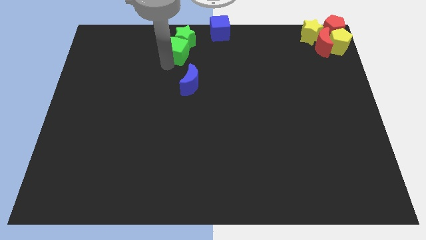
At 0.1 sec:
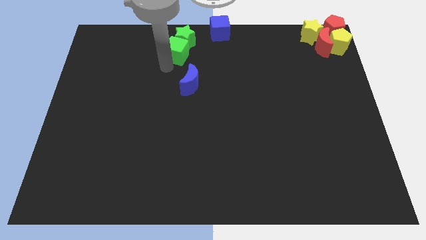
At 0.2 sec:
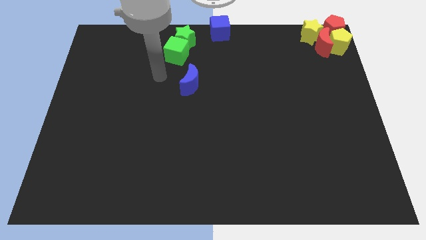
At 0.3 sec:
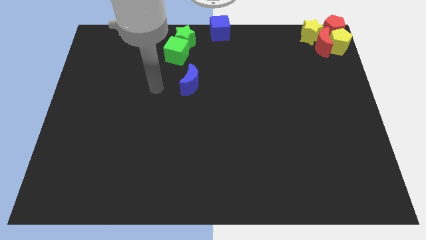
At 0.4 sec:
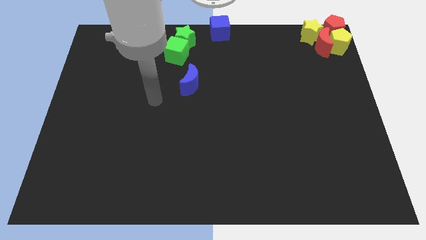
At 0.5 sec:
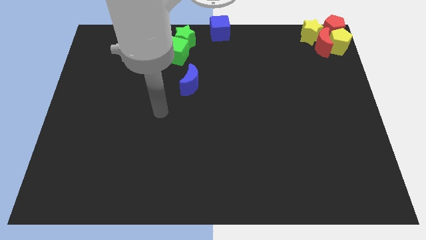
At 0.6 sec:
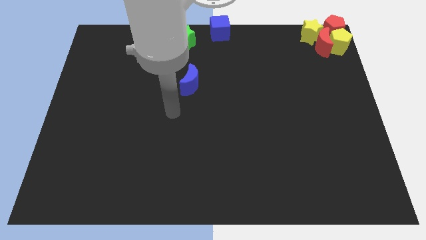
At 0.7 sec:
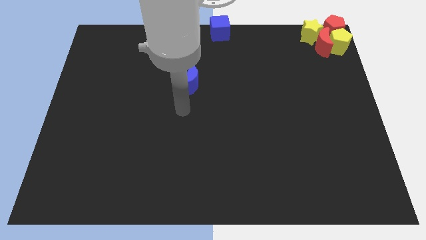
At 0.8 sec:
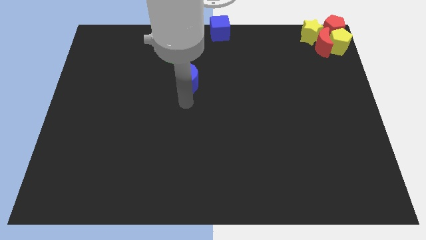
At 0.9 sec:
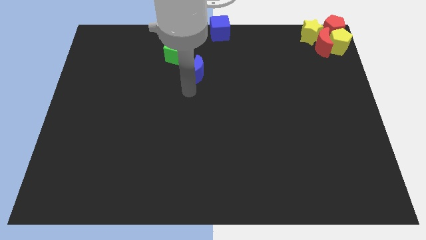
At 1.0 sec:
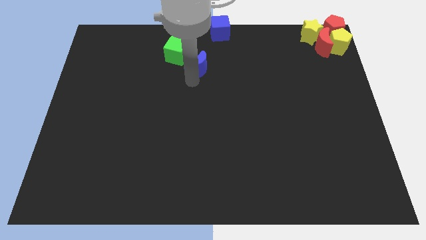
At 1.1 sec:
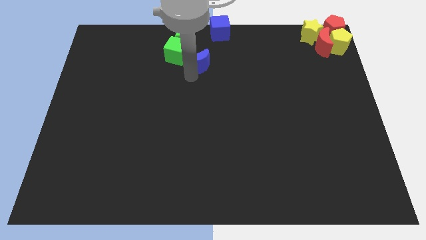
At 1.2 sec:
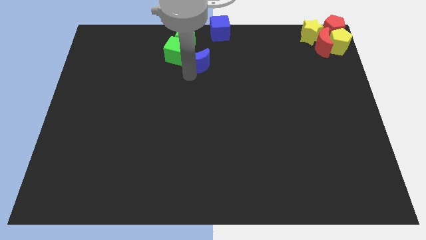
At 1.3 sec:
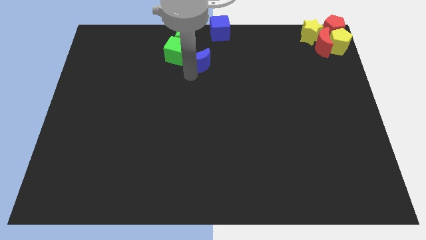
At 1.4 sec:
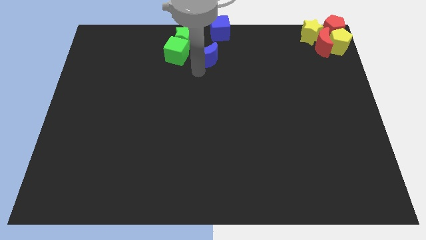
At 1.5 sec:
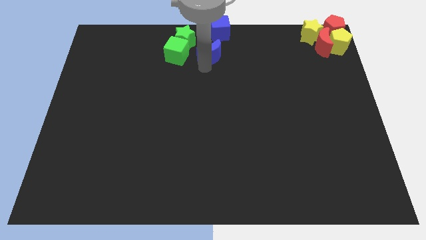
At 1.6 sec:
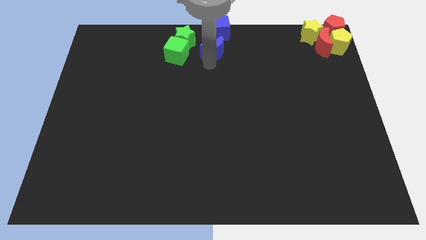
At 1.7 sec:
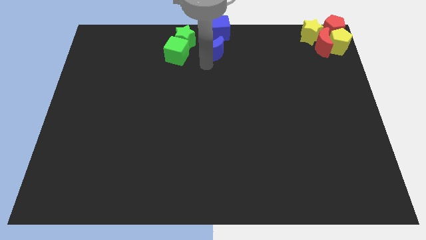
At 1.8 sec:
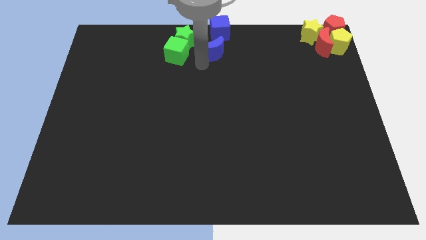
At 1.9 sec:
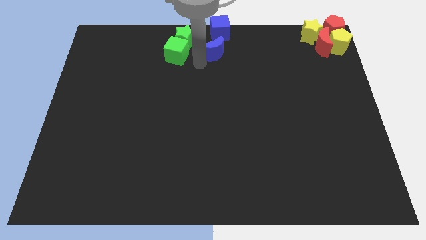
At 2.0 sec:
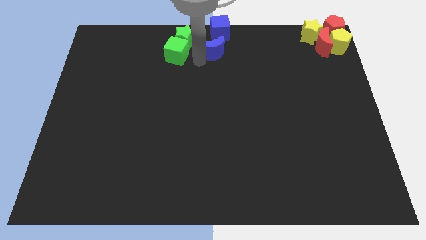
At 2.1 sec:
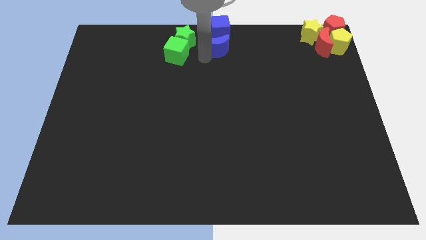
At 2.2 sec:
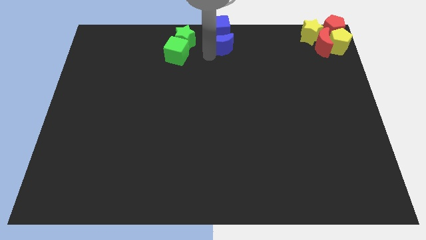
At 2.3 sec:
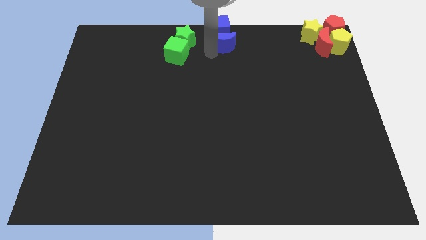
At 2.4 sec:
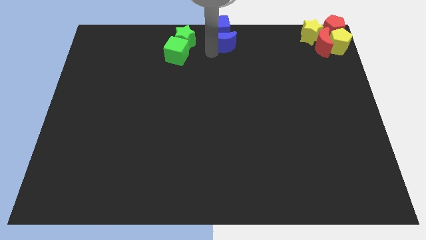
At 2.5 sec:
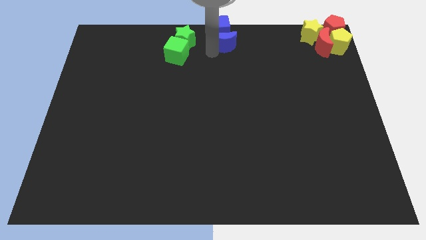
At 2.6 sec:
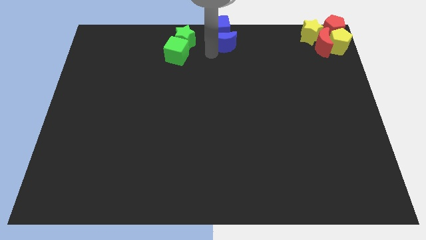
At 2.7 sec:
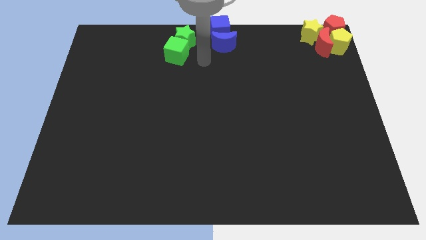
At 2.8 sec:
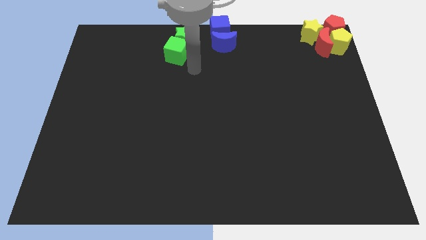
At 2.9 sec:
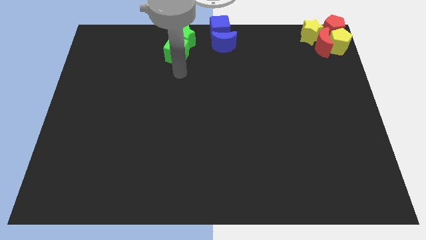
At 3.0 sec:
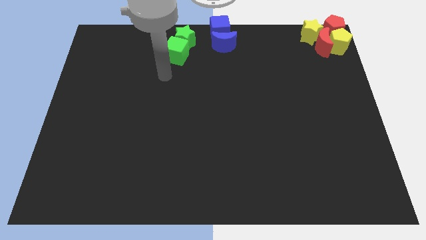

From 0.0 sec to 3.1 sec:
push the blue moon at the bottom side of the blue cube

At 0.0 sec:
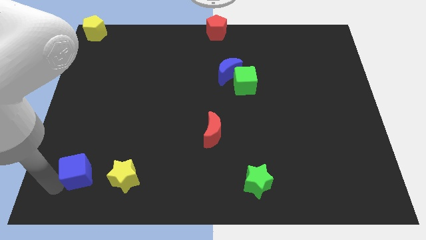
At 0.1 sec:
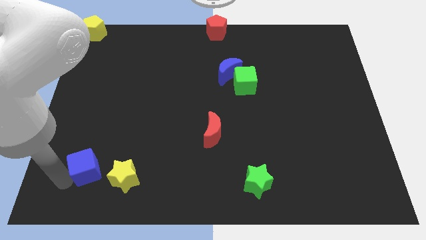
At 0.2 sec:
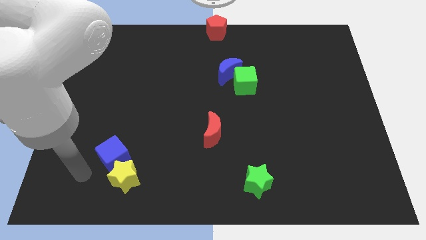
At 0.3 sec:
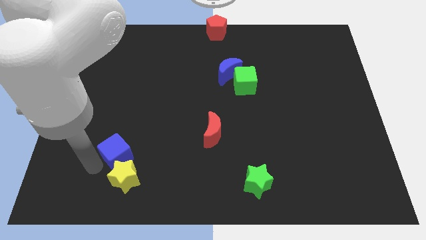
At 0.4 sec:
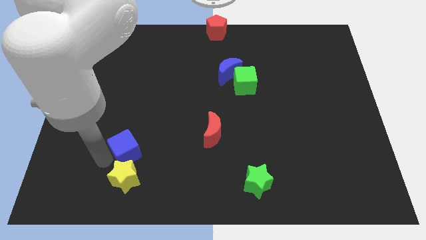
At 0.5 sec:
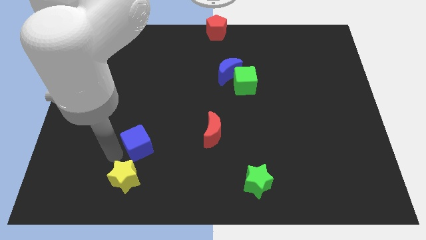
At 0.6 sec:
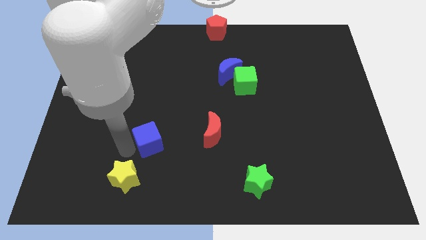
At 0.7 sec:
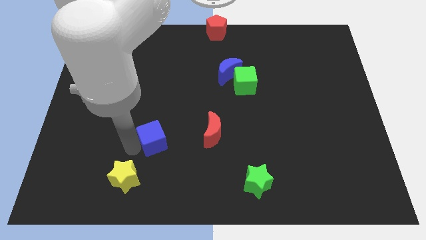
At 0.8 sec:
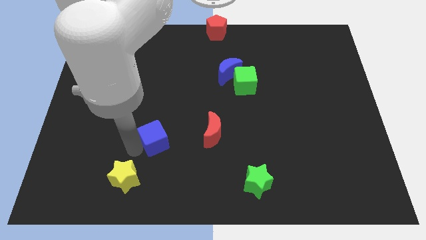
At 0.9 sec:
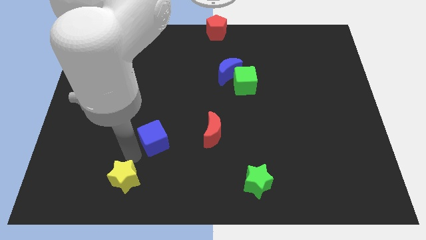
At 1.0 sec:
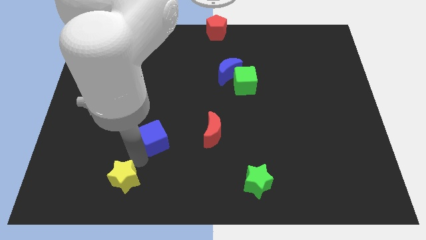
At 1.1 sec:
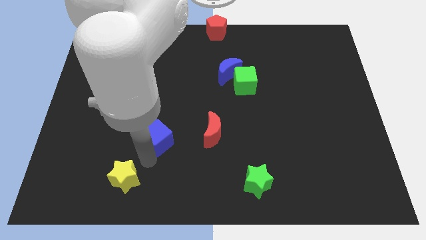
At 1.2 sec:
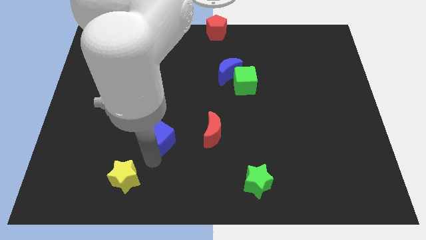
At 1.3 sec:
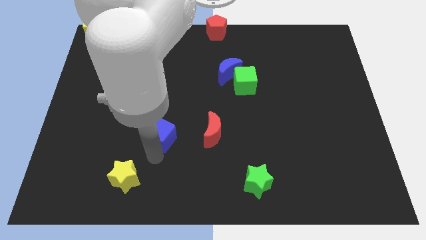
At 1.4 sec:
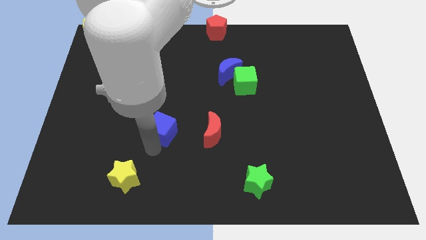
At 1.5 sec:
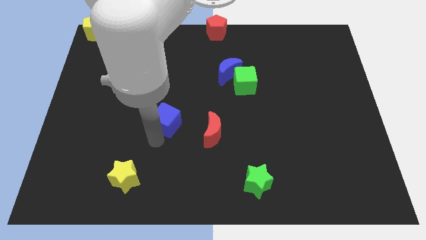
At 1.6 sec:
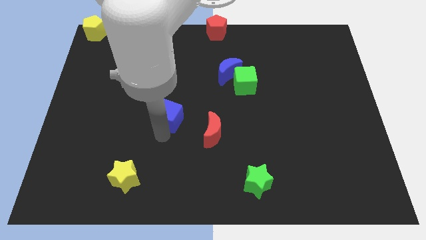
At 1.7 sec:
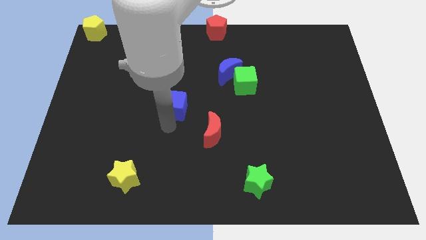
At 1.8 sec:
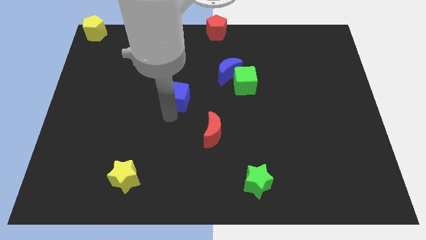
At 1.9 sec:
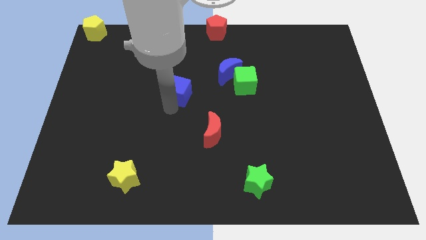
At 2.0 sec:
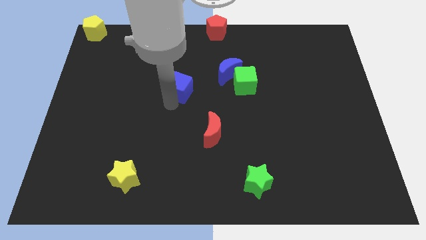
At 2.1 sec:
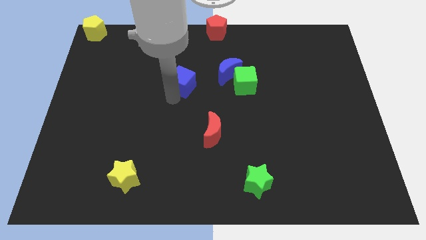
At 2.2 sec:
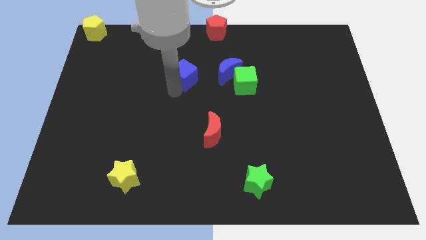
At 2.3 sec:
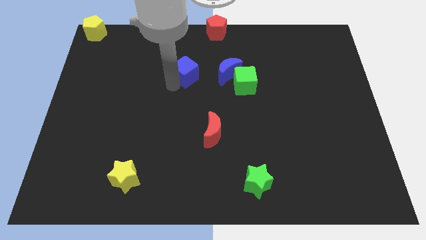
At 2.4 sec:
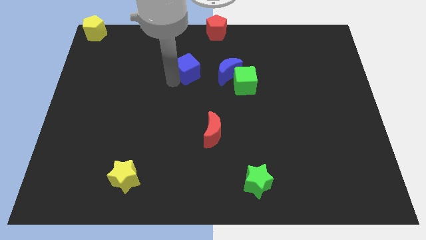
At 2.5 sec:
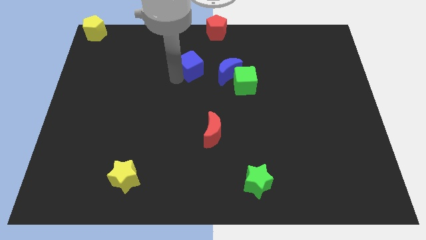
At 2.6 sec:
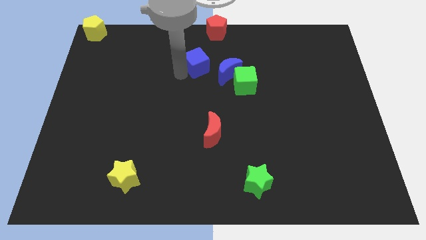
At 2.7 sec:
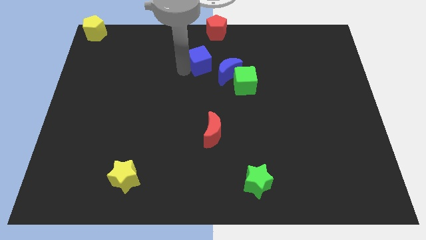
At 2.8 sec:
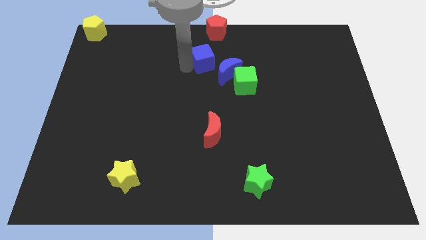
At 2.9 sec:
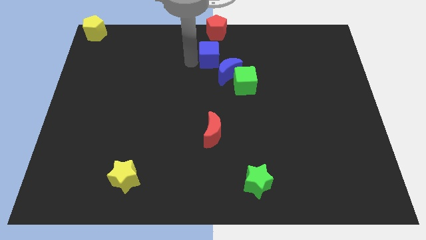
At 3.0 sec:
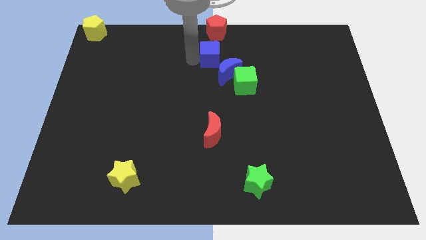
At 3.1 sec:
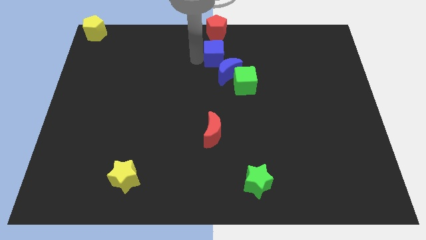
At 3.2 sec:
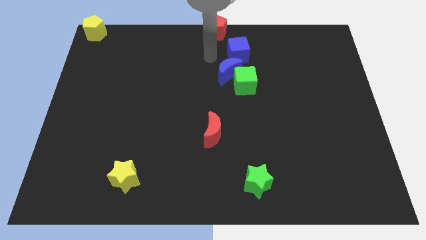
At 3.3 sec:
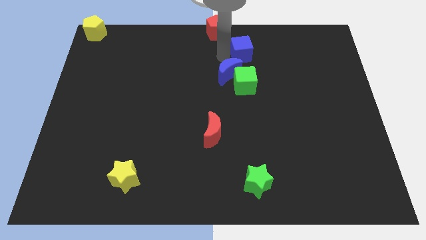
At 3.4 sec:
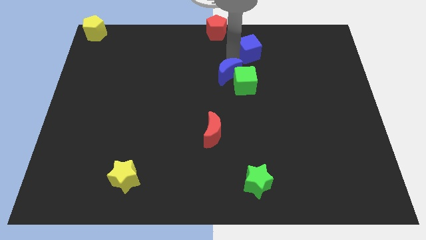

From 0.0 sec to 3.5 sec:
push the blue cube to the top side of the green cube

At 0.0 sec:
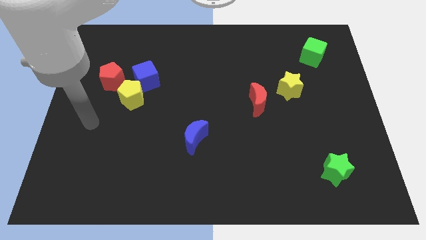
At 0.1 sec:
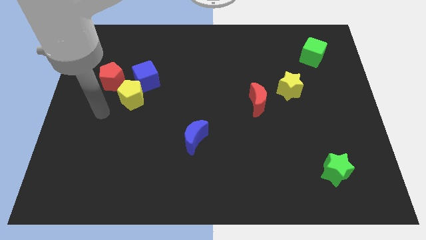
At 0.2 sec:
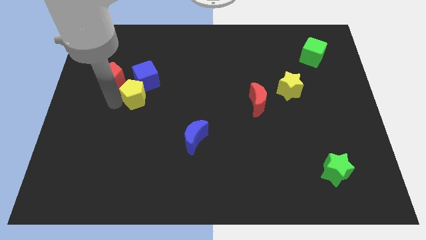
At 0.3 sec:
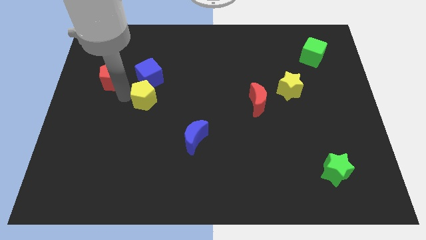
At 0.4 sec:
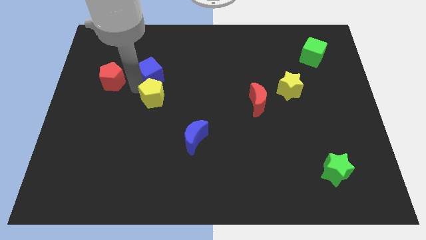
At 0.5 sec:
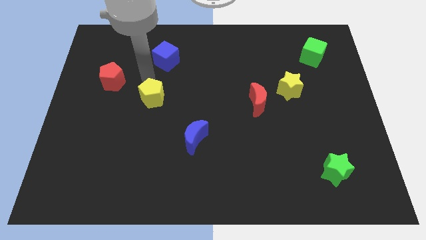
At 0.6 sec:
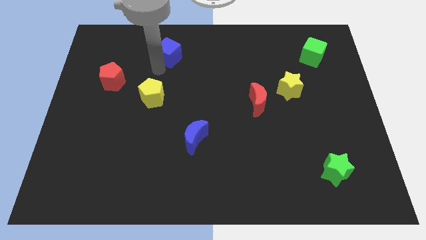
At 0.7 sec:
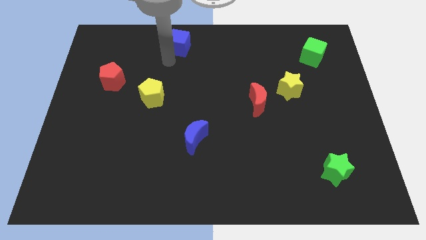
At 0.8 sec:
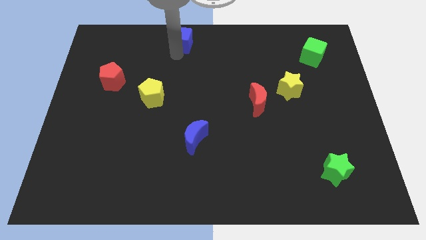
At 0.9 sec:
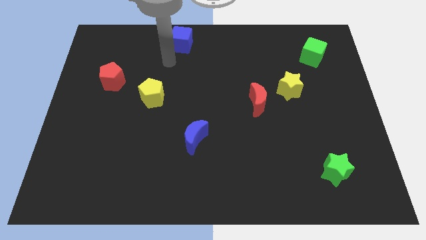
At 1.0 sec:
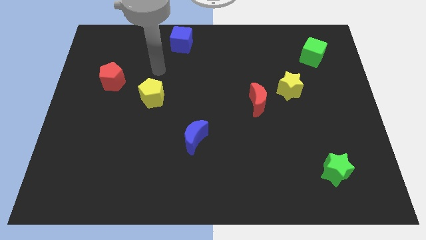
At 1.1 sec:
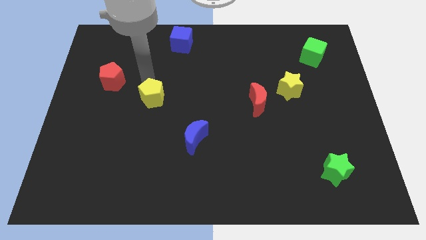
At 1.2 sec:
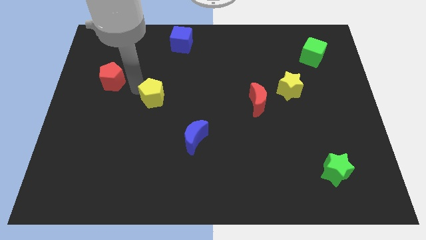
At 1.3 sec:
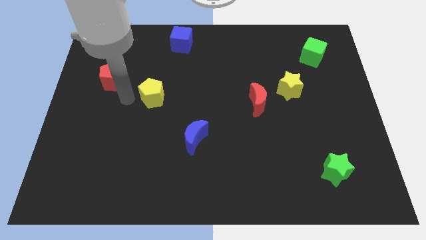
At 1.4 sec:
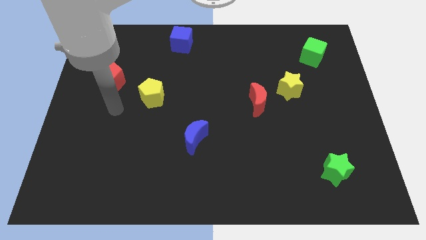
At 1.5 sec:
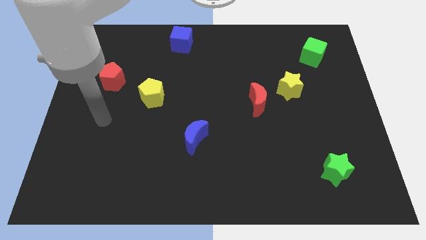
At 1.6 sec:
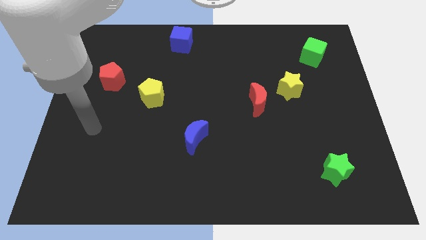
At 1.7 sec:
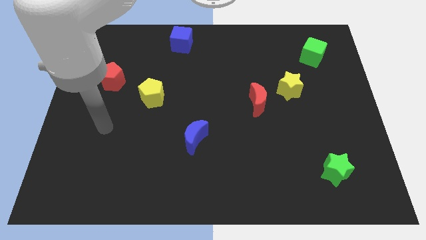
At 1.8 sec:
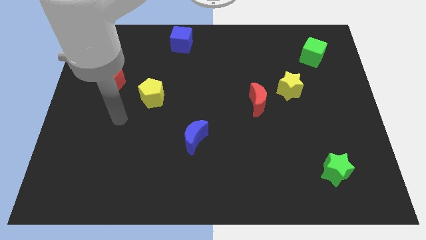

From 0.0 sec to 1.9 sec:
push blue cube away from red pentagon and yellow pentagon

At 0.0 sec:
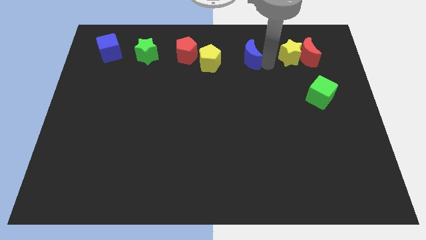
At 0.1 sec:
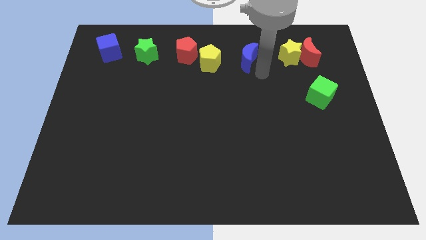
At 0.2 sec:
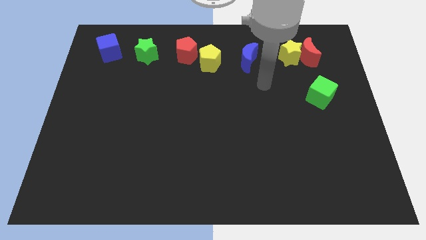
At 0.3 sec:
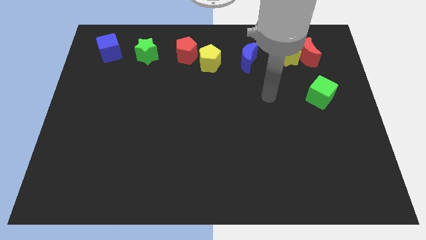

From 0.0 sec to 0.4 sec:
touch the right side of the blue moon
